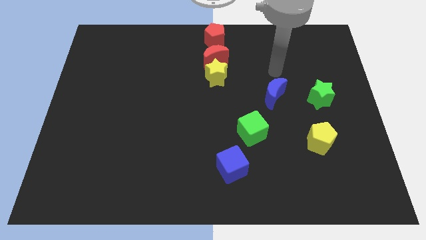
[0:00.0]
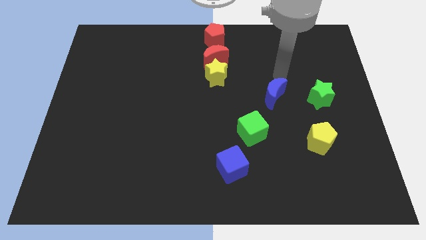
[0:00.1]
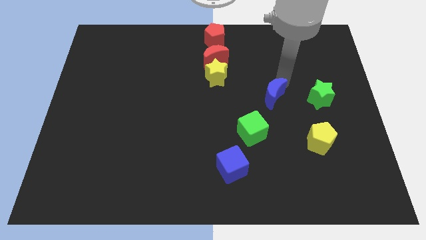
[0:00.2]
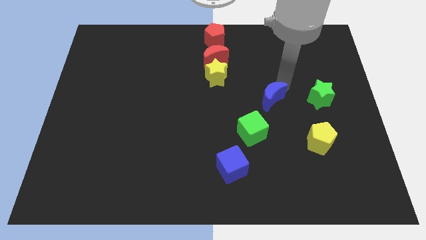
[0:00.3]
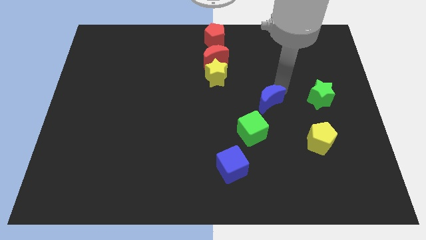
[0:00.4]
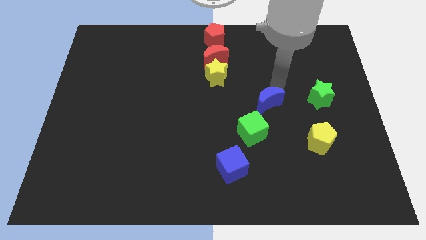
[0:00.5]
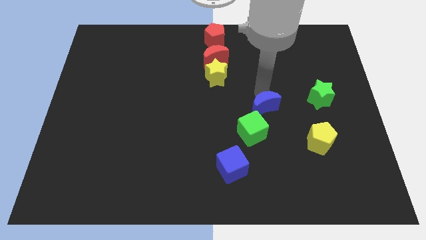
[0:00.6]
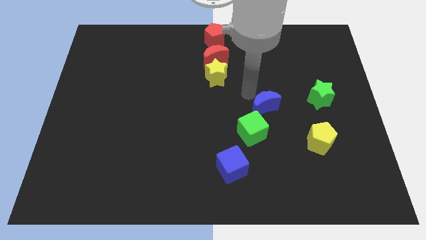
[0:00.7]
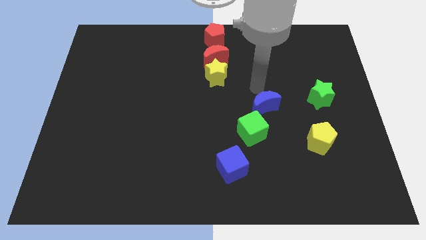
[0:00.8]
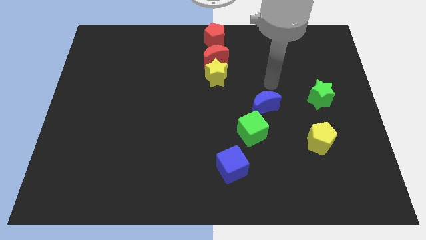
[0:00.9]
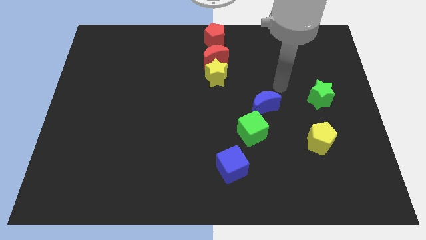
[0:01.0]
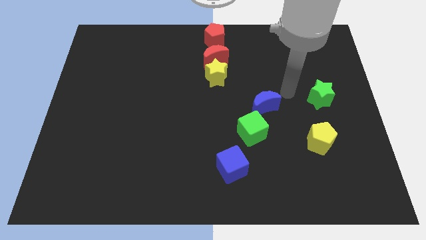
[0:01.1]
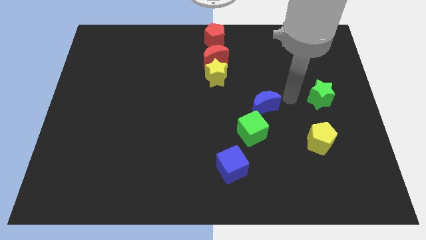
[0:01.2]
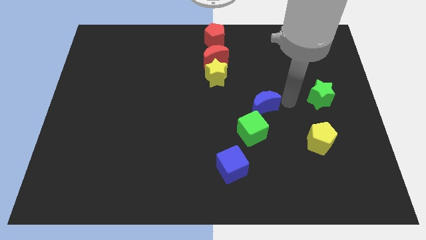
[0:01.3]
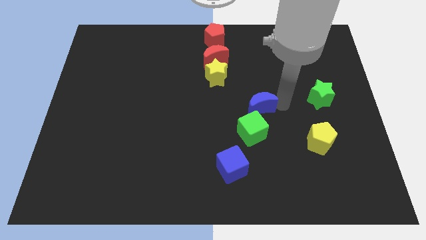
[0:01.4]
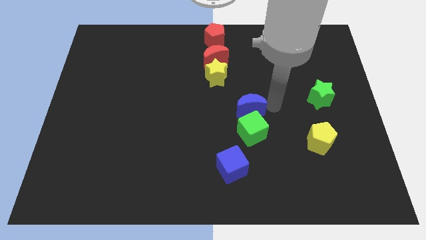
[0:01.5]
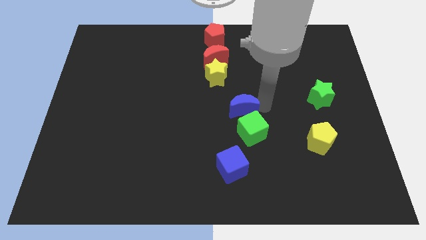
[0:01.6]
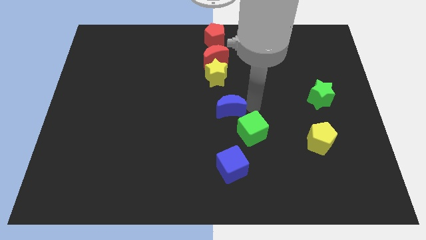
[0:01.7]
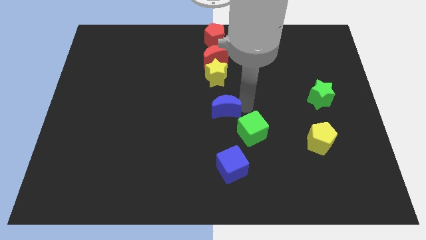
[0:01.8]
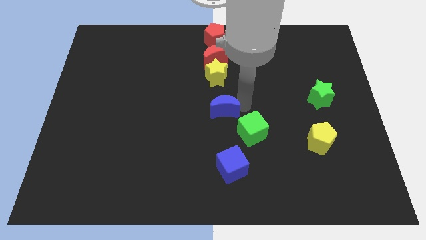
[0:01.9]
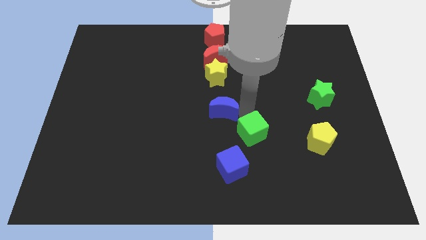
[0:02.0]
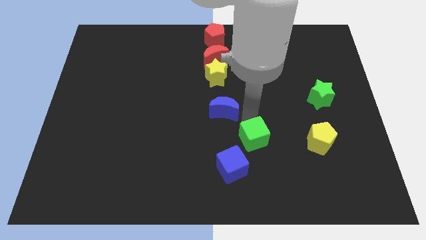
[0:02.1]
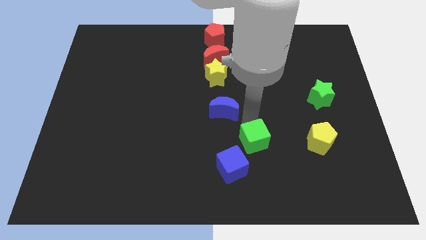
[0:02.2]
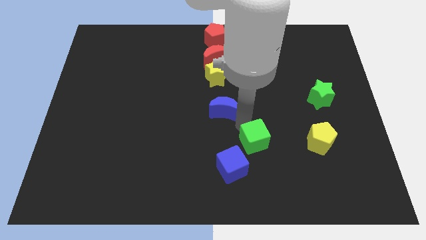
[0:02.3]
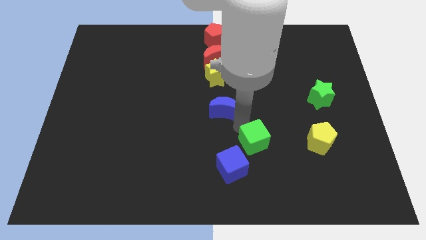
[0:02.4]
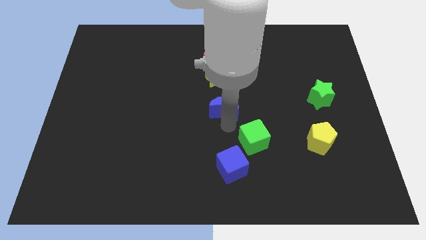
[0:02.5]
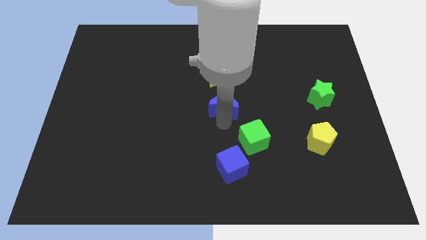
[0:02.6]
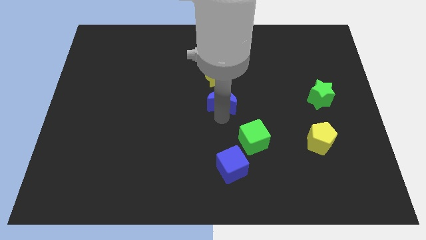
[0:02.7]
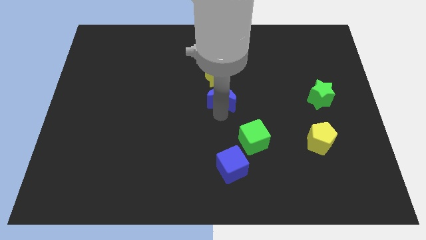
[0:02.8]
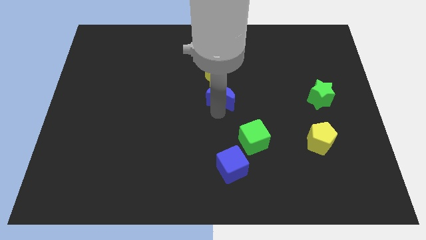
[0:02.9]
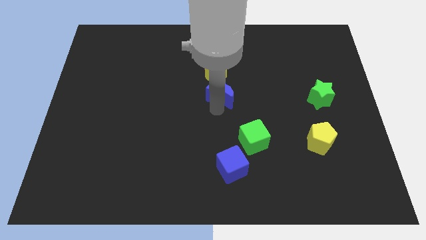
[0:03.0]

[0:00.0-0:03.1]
push blue moon below yellow star

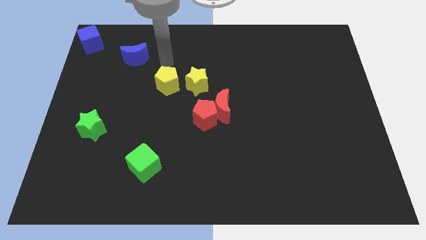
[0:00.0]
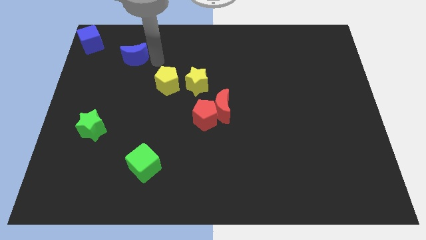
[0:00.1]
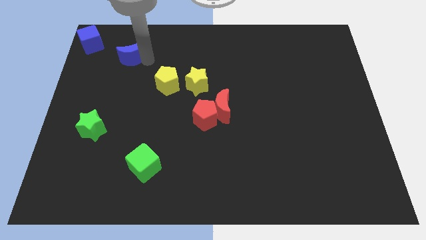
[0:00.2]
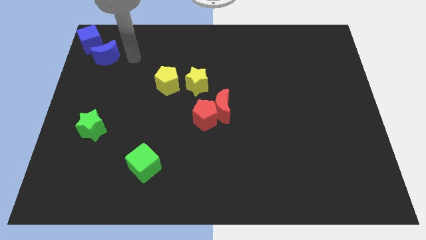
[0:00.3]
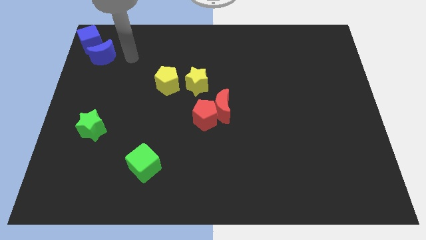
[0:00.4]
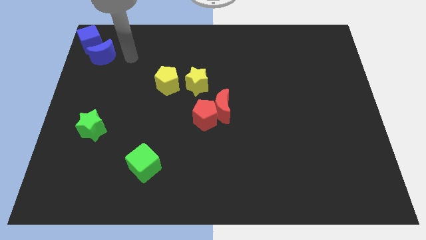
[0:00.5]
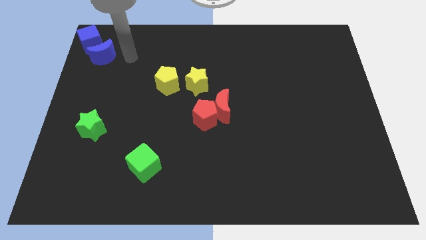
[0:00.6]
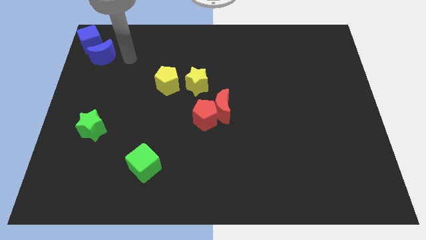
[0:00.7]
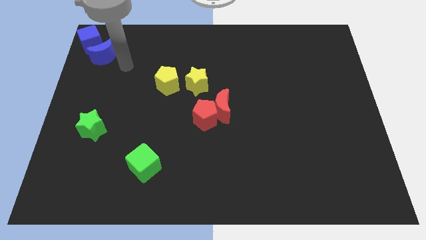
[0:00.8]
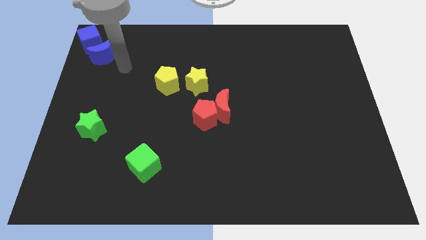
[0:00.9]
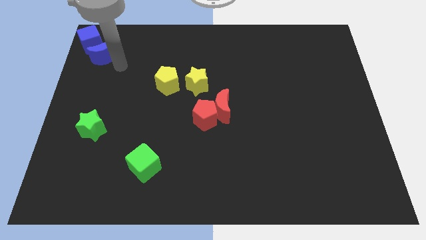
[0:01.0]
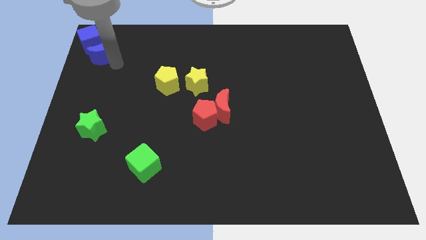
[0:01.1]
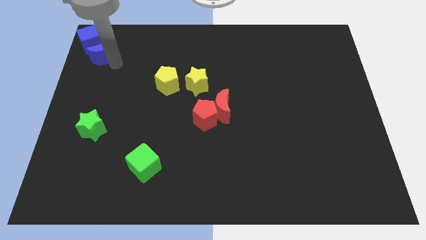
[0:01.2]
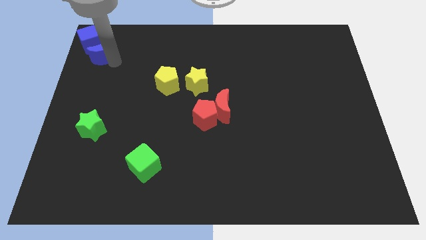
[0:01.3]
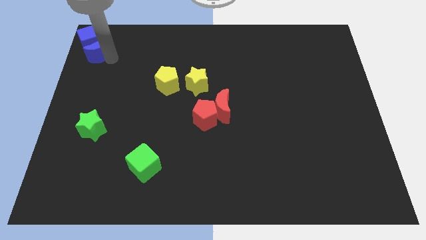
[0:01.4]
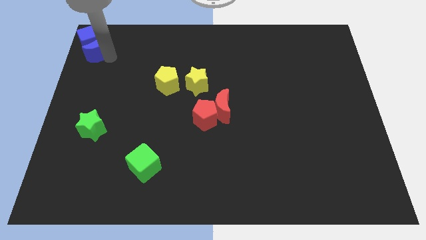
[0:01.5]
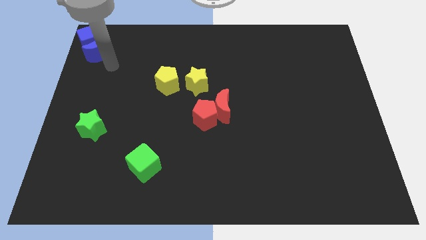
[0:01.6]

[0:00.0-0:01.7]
move the blue crescent to the top left corner of the board

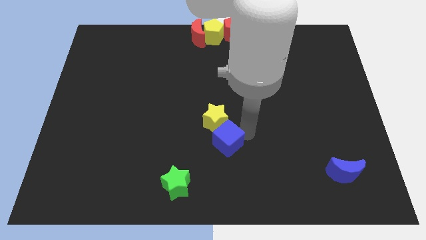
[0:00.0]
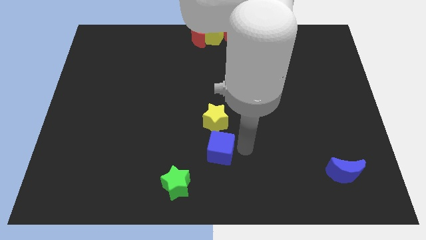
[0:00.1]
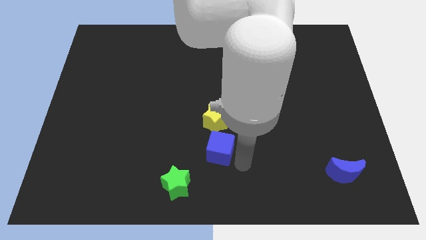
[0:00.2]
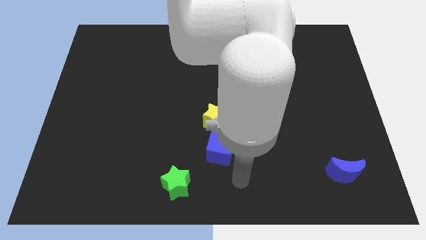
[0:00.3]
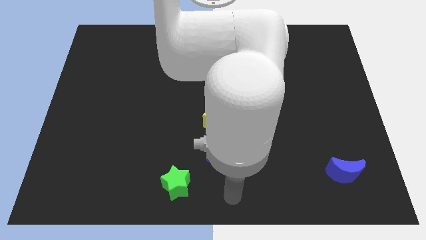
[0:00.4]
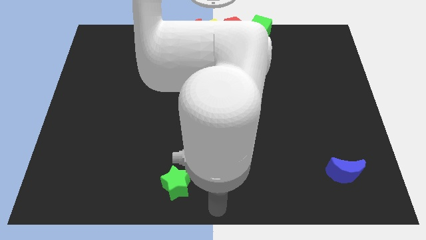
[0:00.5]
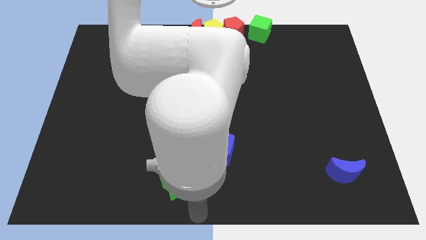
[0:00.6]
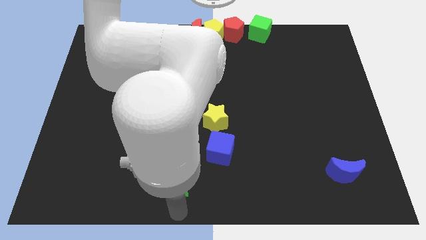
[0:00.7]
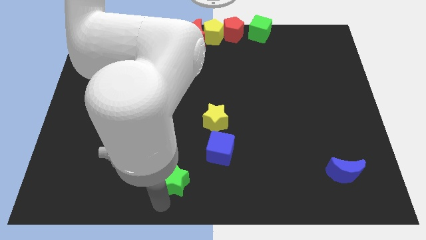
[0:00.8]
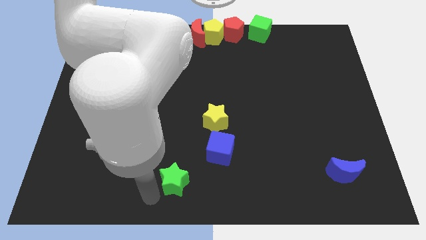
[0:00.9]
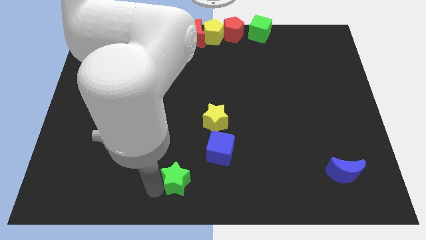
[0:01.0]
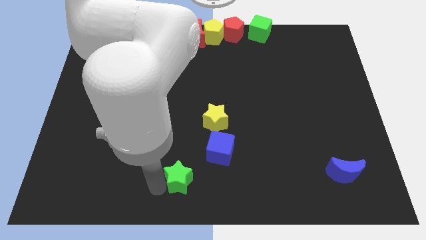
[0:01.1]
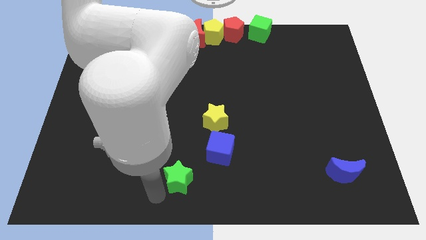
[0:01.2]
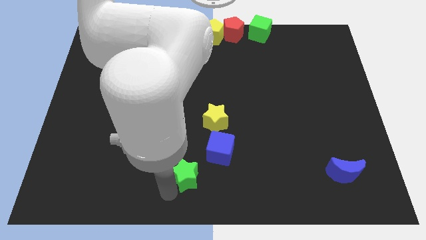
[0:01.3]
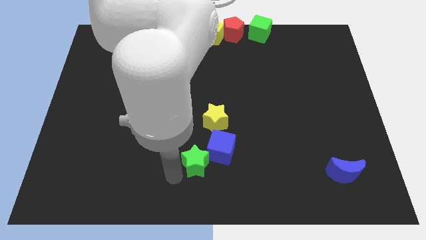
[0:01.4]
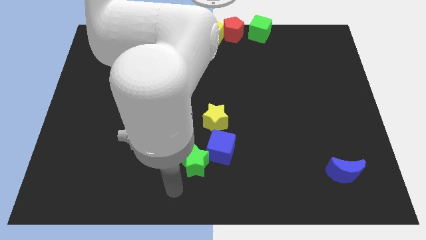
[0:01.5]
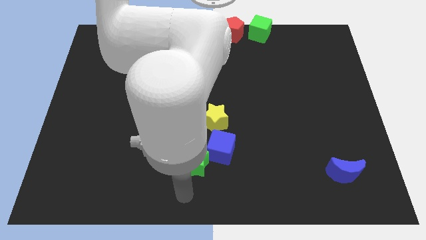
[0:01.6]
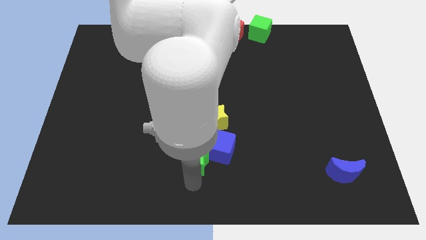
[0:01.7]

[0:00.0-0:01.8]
push the green star into the blue cube

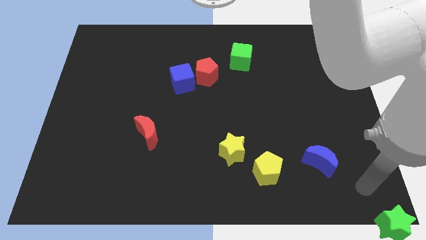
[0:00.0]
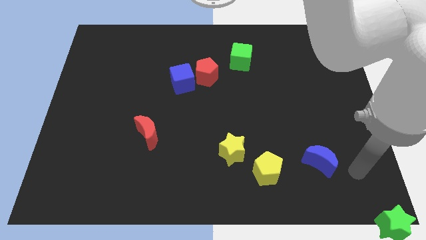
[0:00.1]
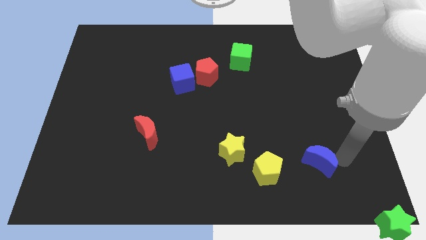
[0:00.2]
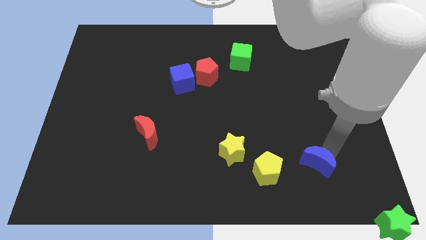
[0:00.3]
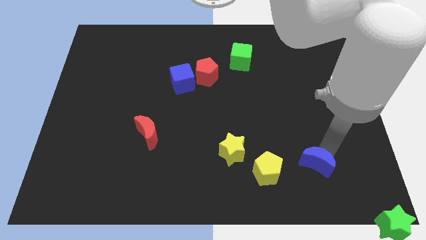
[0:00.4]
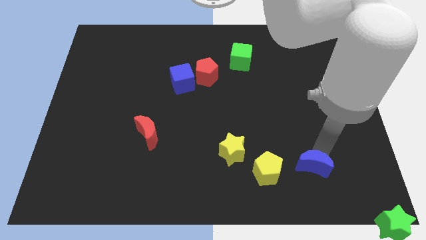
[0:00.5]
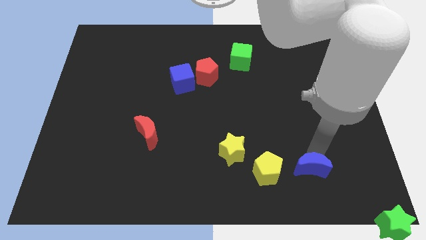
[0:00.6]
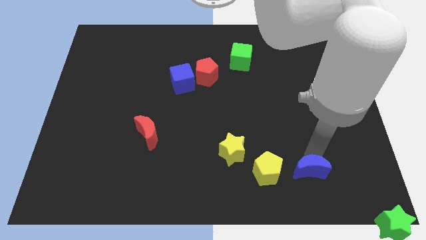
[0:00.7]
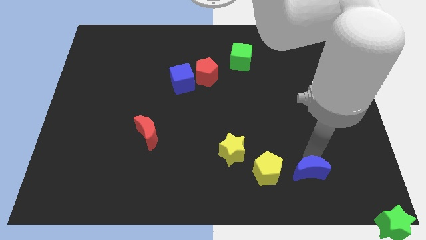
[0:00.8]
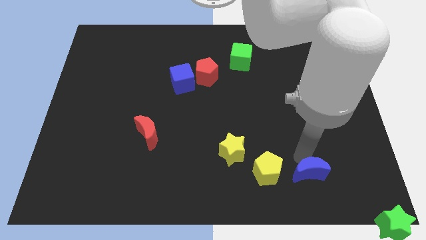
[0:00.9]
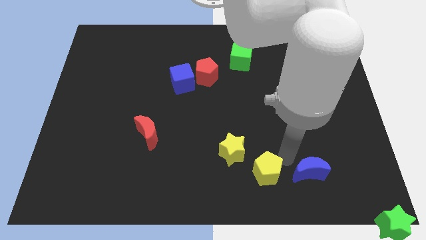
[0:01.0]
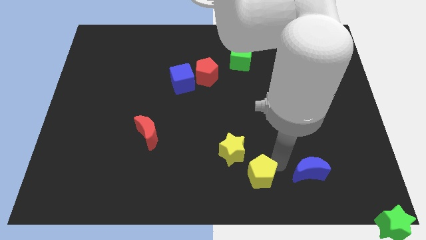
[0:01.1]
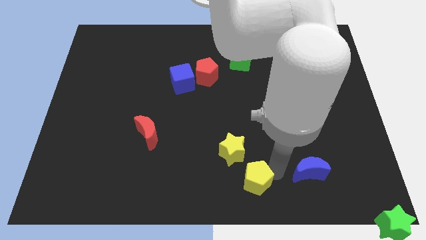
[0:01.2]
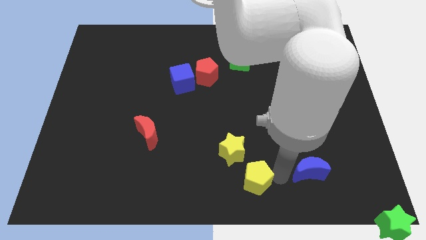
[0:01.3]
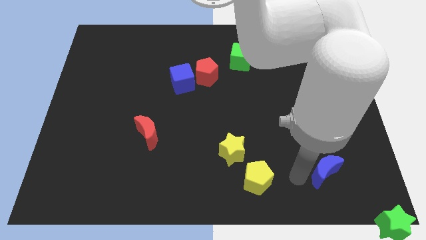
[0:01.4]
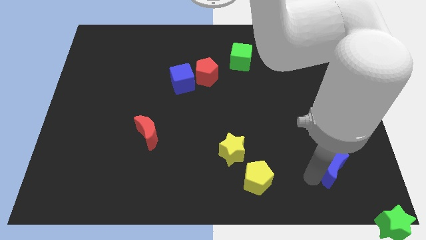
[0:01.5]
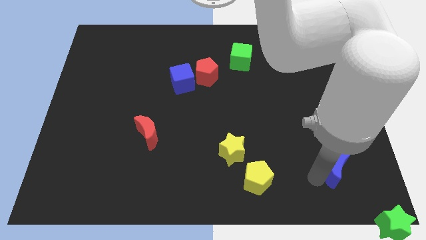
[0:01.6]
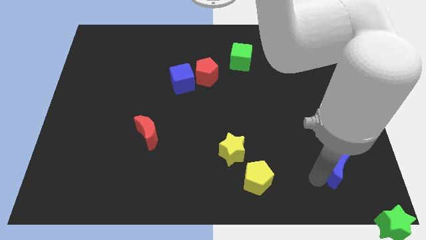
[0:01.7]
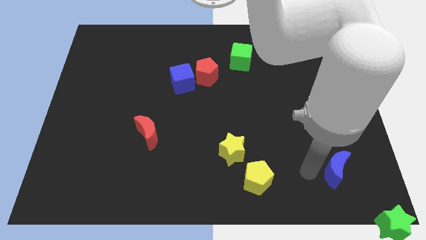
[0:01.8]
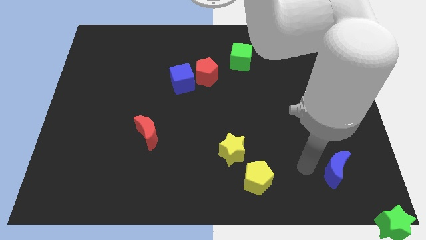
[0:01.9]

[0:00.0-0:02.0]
move the yellow pentagon and the blue moon away from each other

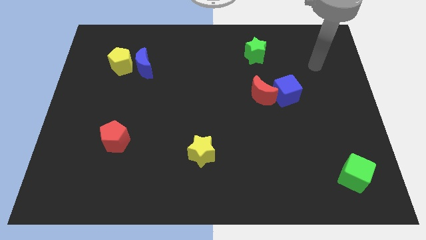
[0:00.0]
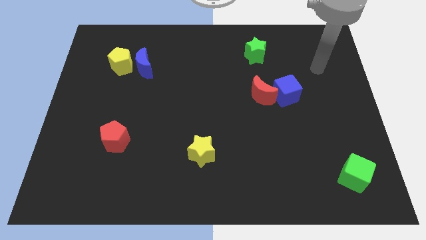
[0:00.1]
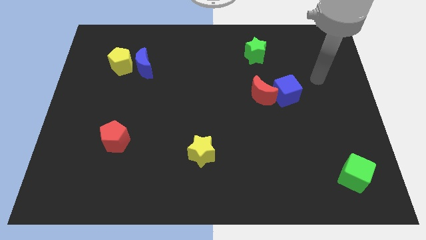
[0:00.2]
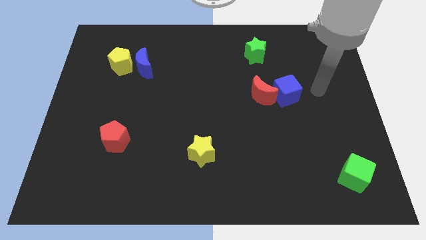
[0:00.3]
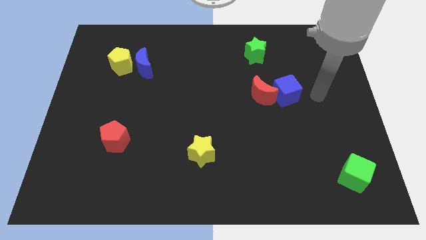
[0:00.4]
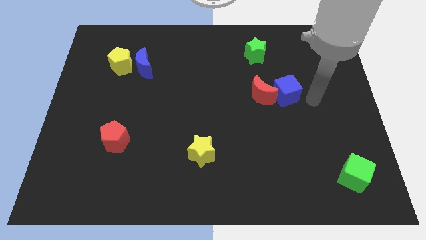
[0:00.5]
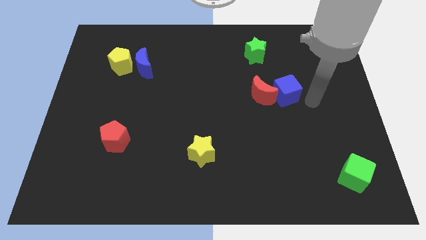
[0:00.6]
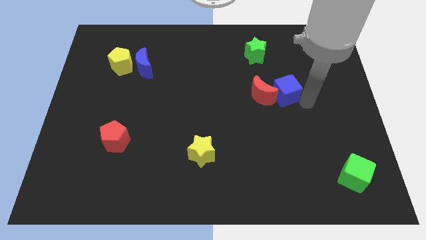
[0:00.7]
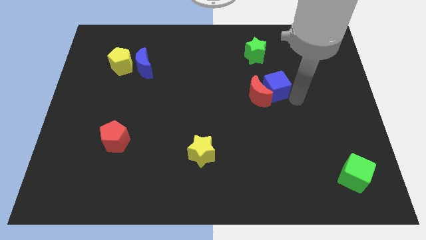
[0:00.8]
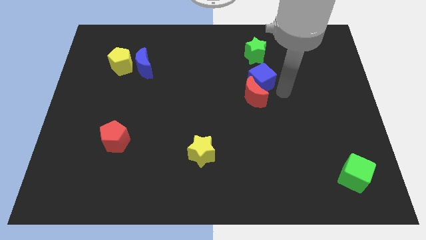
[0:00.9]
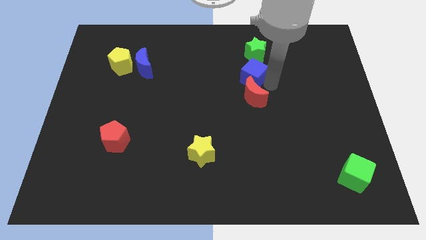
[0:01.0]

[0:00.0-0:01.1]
slide blue cube above to the red moon
